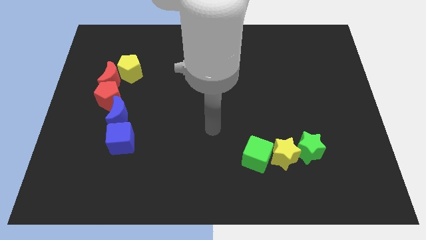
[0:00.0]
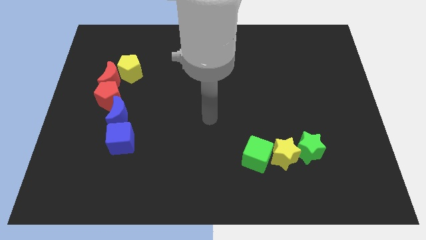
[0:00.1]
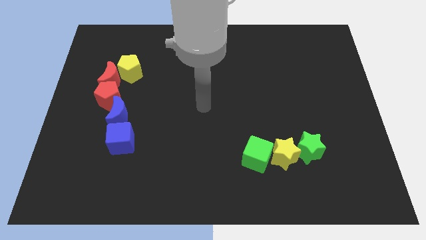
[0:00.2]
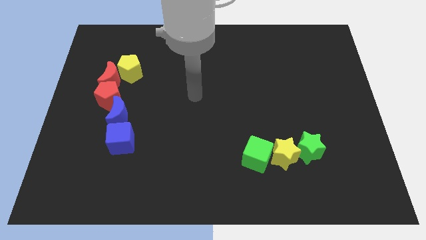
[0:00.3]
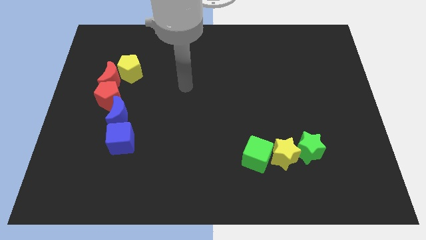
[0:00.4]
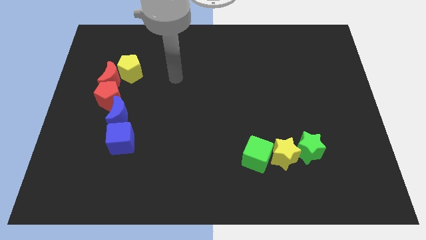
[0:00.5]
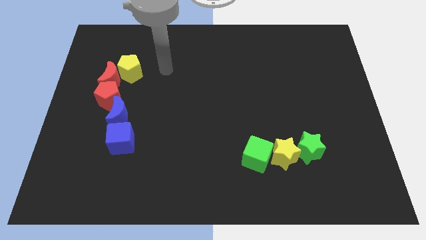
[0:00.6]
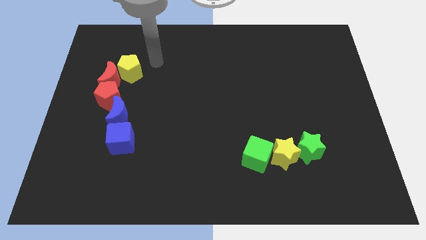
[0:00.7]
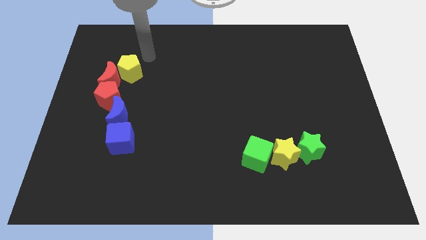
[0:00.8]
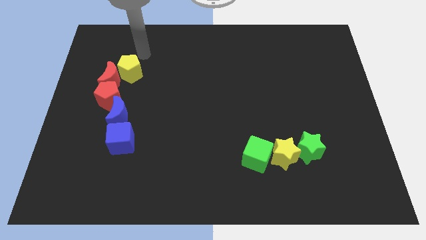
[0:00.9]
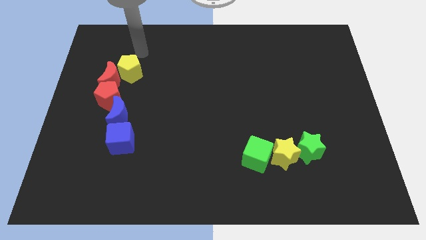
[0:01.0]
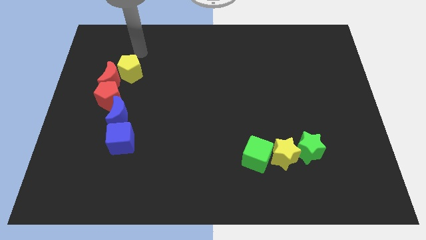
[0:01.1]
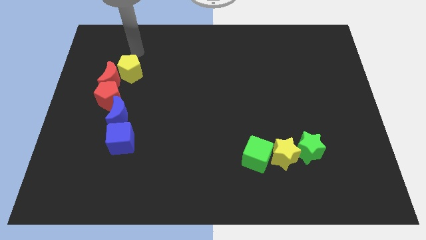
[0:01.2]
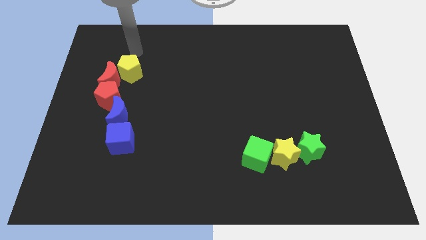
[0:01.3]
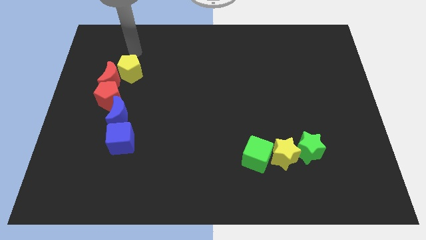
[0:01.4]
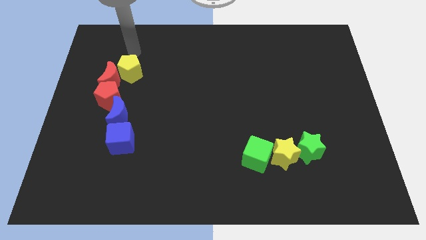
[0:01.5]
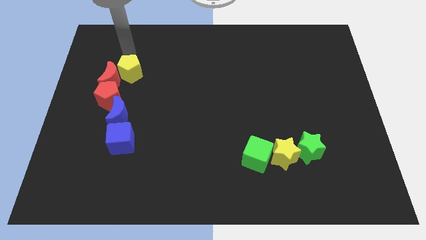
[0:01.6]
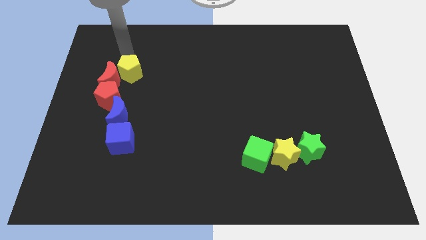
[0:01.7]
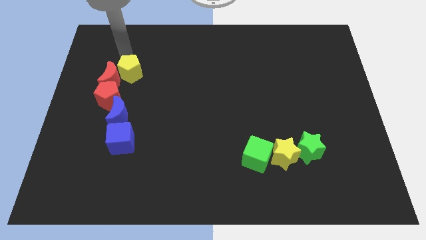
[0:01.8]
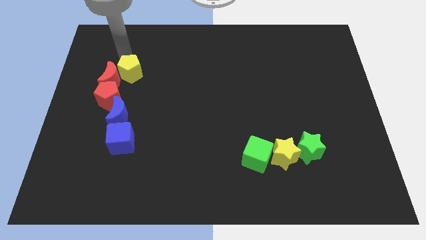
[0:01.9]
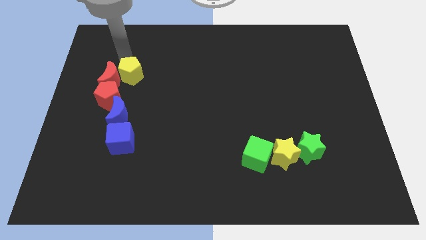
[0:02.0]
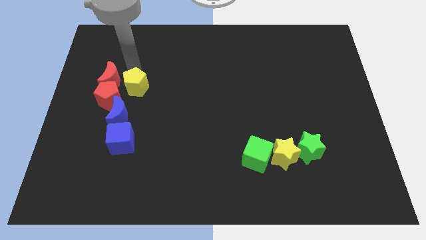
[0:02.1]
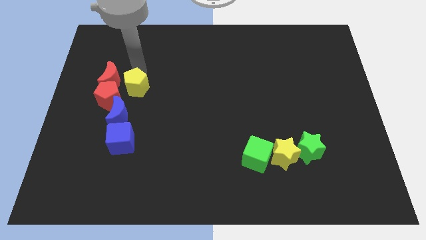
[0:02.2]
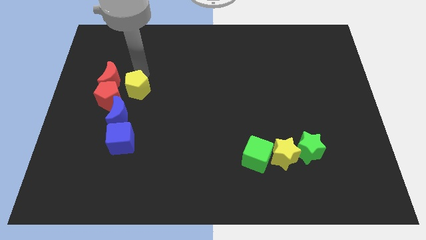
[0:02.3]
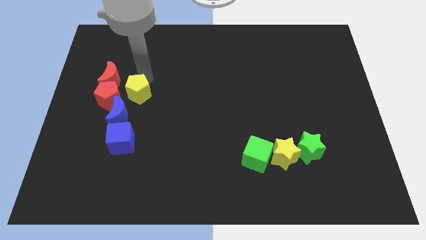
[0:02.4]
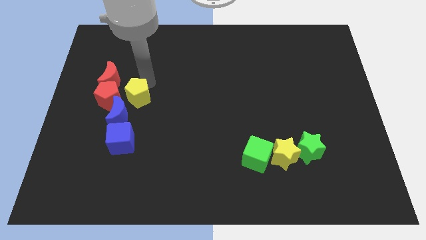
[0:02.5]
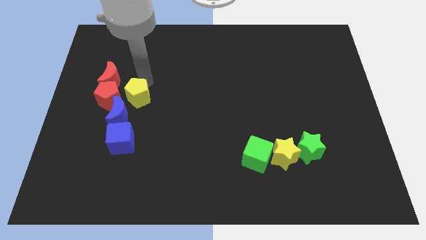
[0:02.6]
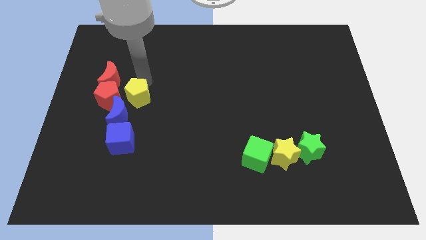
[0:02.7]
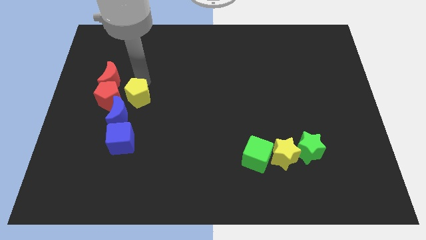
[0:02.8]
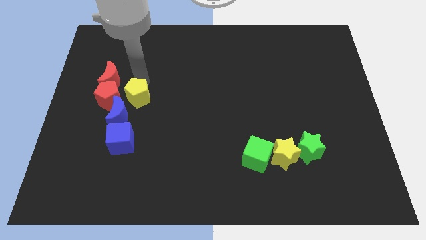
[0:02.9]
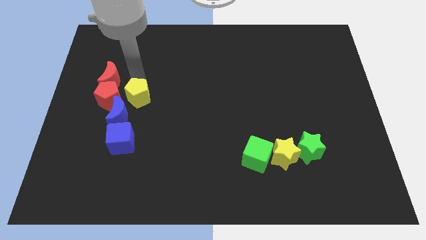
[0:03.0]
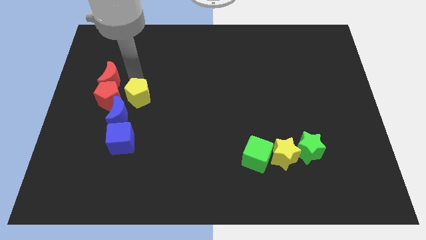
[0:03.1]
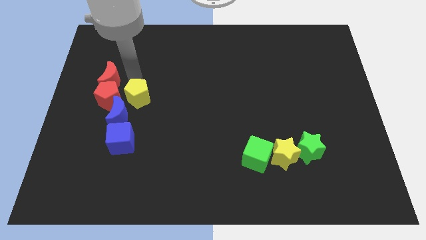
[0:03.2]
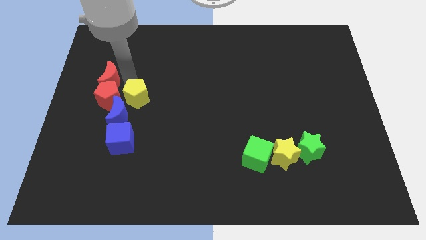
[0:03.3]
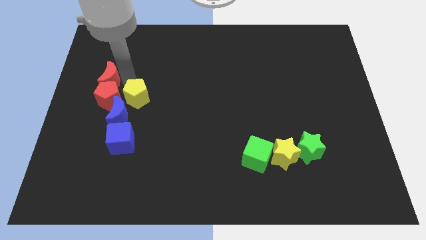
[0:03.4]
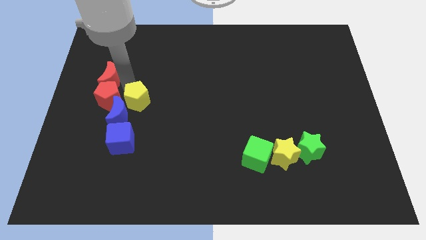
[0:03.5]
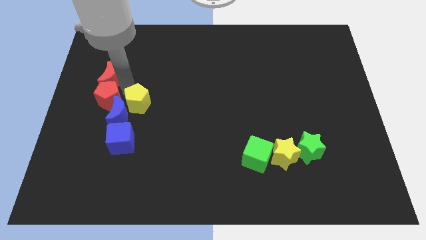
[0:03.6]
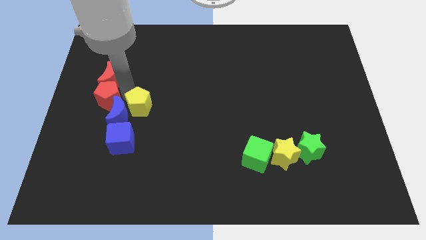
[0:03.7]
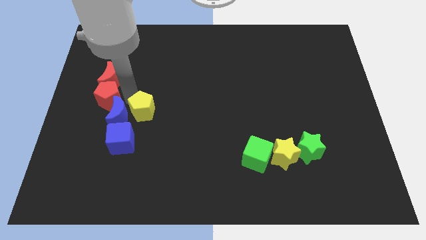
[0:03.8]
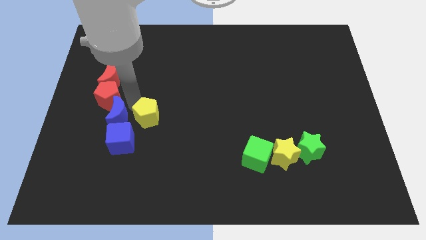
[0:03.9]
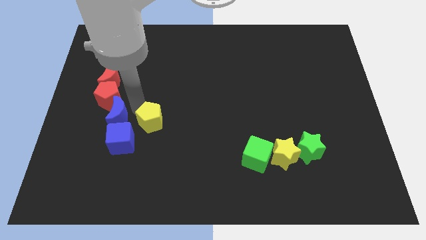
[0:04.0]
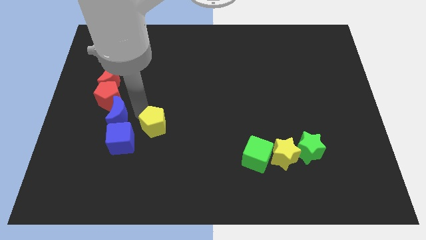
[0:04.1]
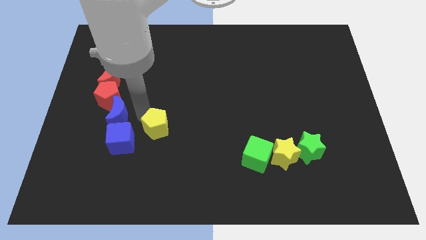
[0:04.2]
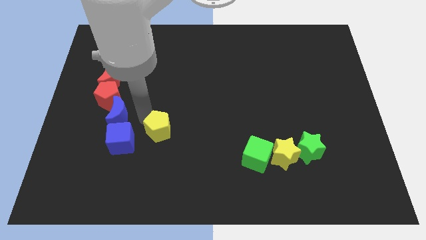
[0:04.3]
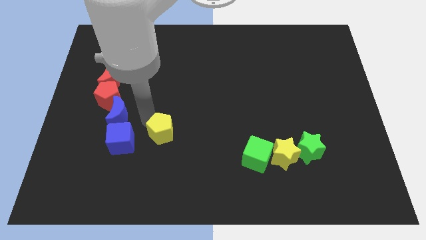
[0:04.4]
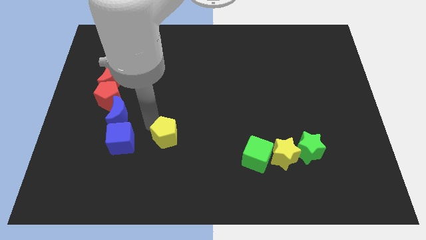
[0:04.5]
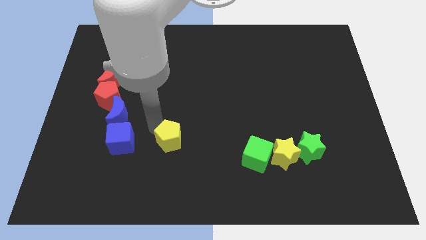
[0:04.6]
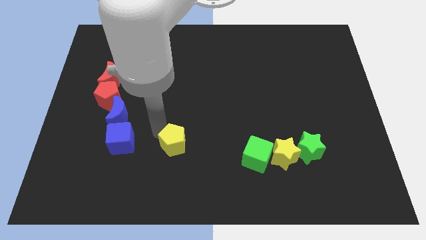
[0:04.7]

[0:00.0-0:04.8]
move the yellow pentagon to the right of the blue cube

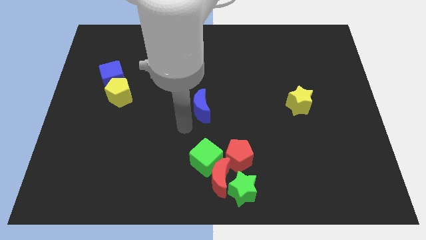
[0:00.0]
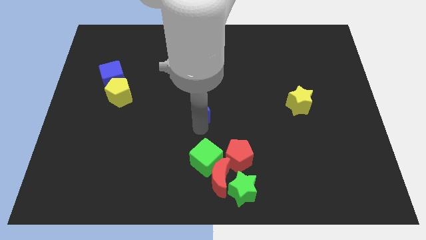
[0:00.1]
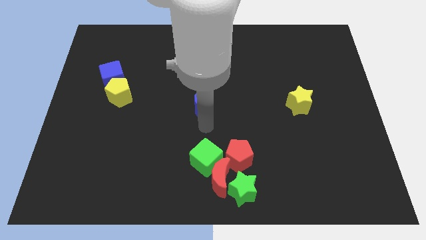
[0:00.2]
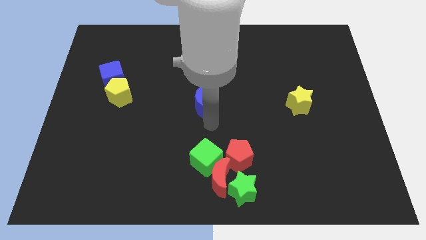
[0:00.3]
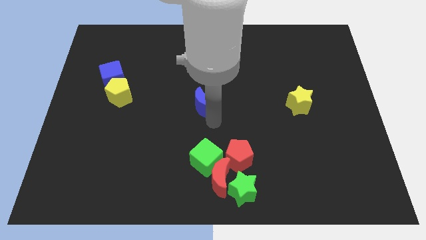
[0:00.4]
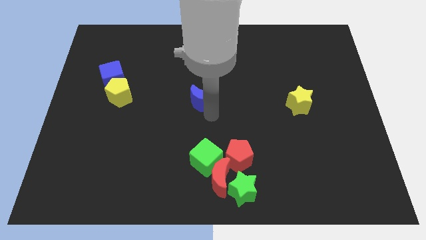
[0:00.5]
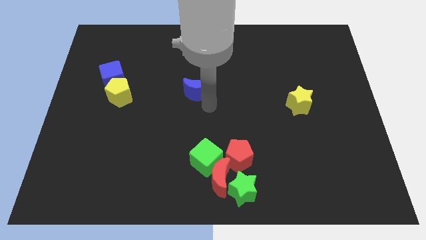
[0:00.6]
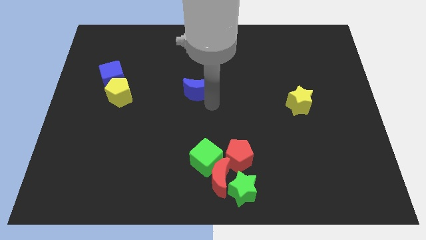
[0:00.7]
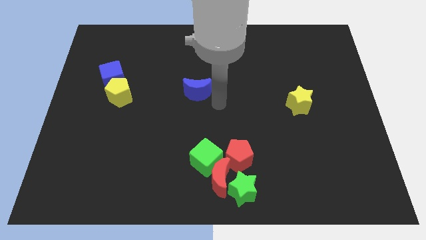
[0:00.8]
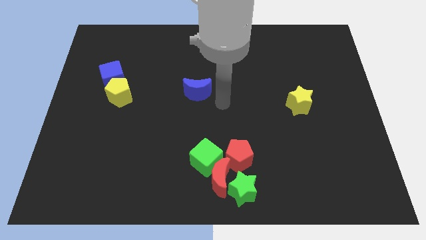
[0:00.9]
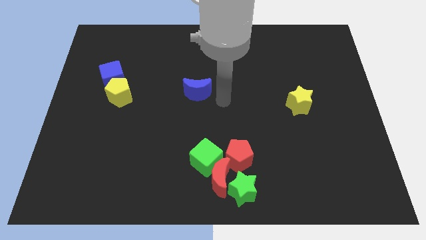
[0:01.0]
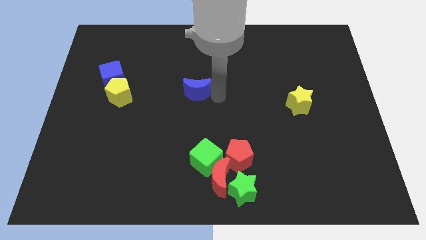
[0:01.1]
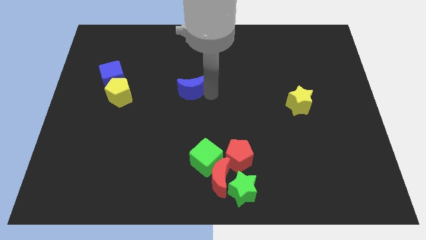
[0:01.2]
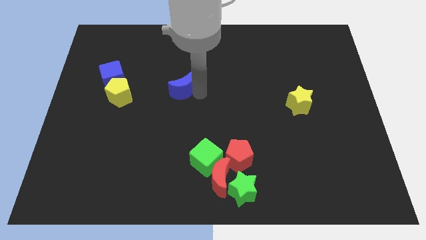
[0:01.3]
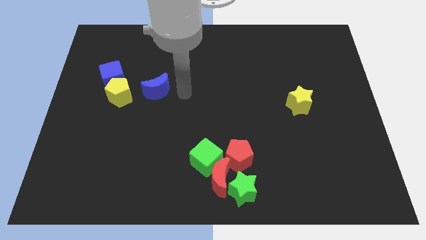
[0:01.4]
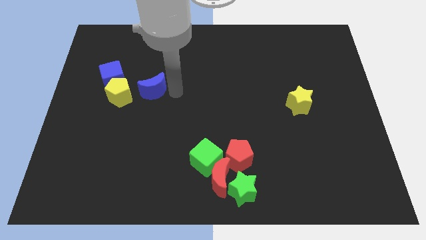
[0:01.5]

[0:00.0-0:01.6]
move blue moon right beside the yellow pentagon

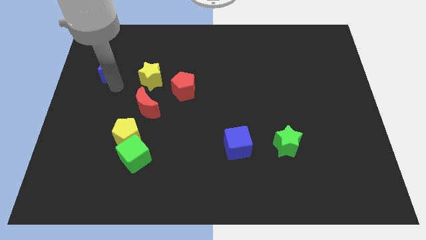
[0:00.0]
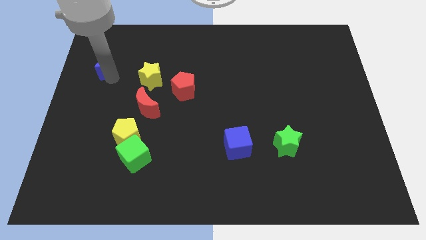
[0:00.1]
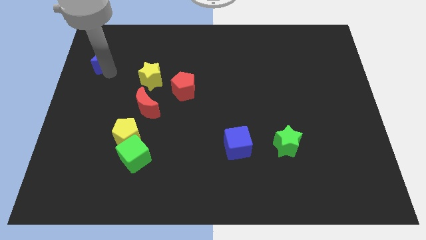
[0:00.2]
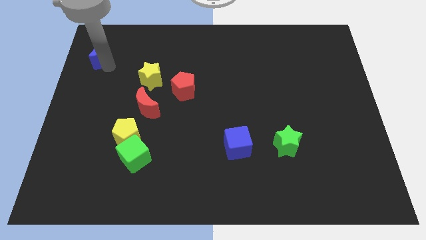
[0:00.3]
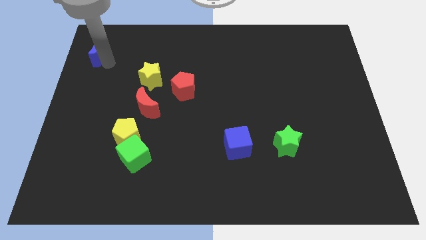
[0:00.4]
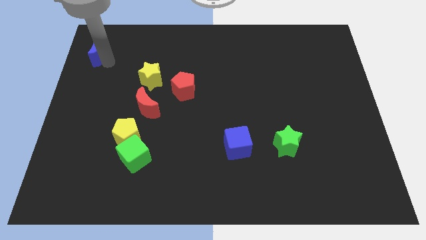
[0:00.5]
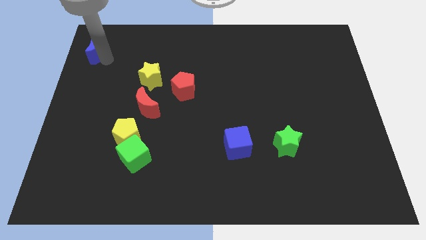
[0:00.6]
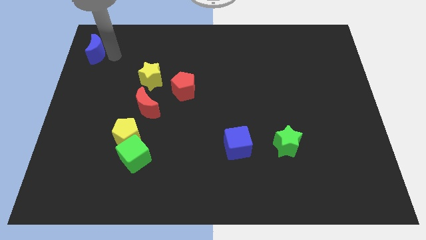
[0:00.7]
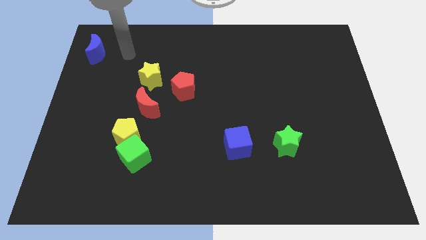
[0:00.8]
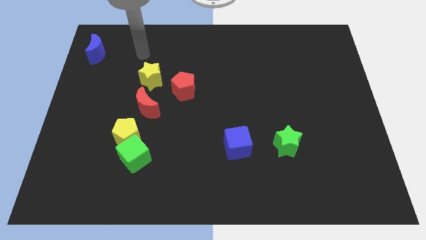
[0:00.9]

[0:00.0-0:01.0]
move the blue moon to the top left

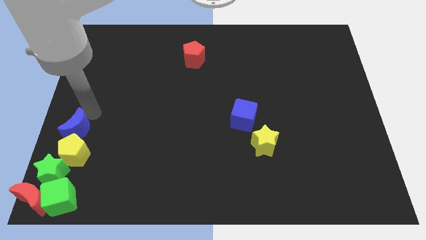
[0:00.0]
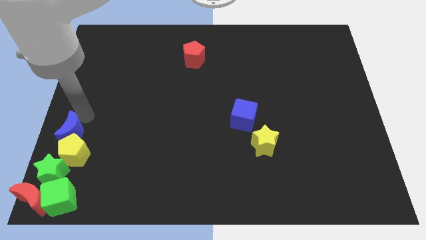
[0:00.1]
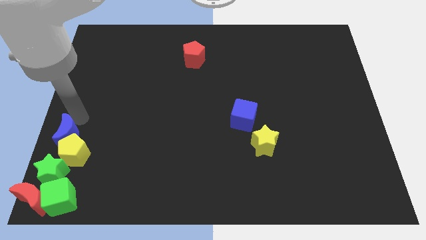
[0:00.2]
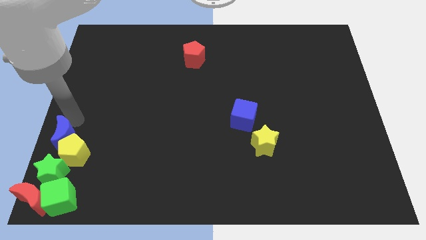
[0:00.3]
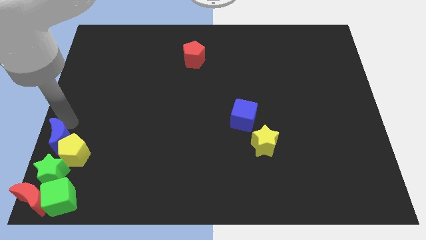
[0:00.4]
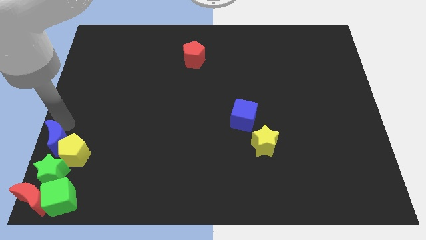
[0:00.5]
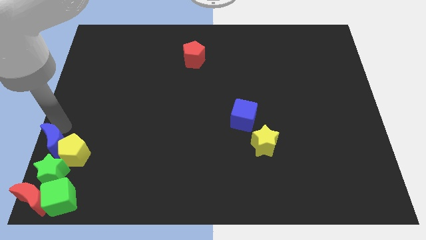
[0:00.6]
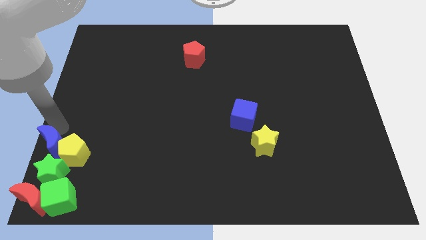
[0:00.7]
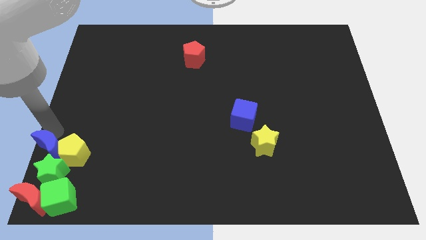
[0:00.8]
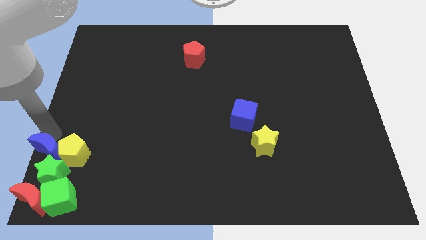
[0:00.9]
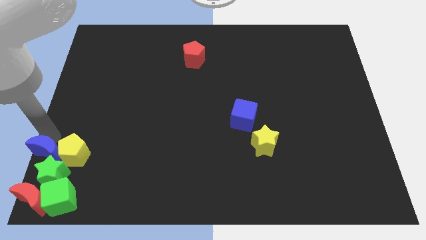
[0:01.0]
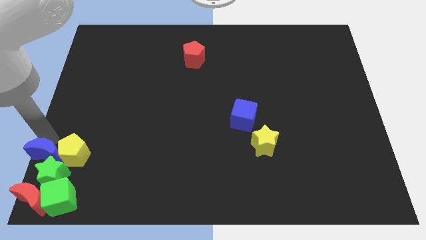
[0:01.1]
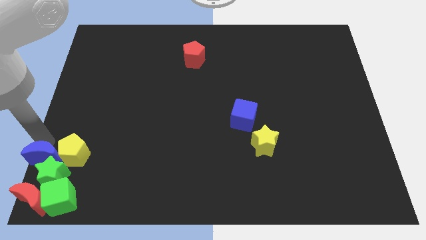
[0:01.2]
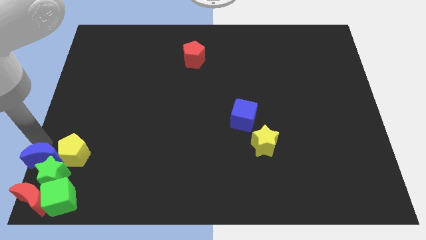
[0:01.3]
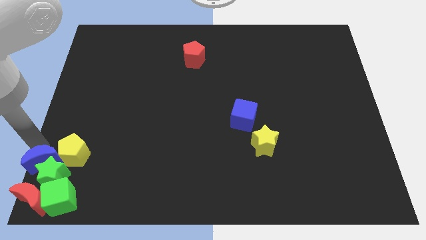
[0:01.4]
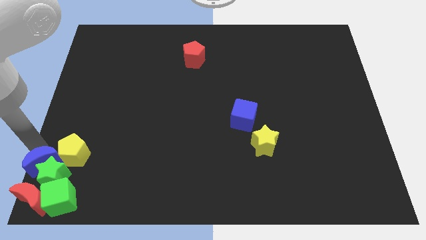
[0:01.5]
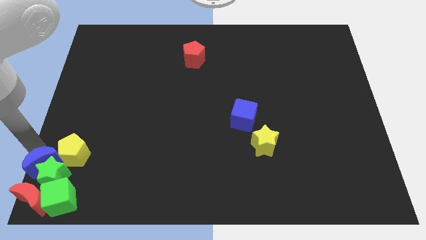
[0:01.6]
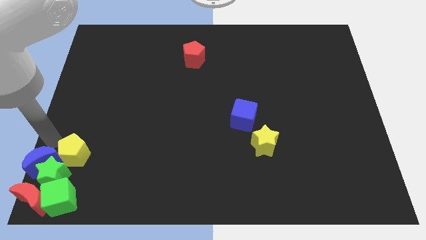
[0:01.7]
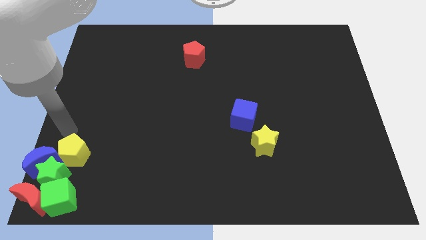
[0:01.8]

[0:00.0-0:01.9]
push the blue moon into the group of blocks
